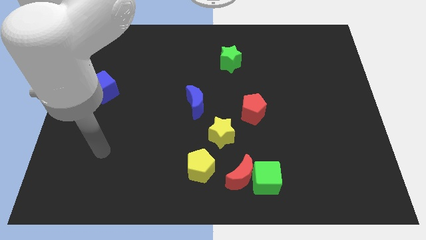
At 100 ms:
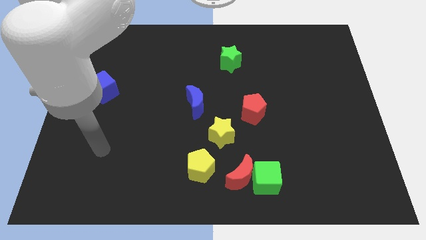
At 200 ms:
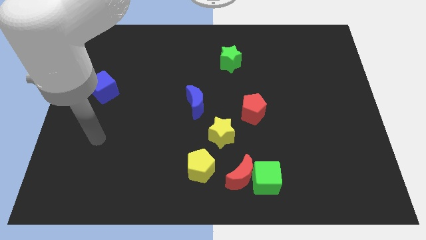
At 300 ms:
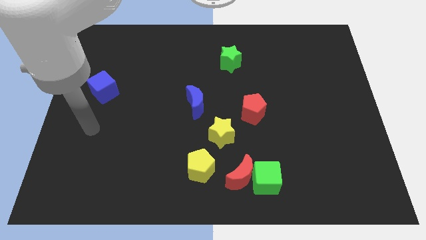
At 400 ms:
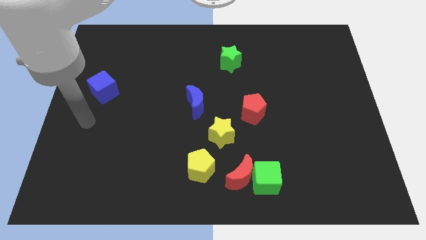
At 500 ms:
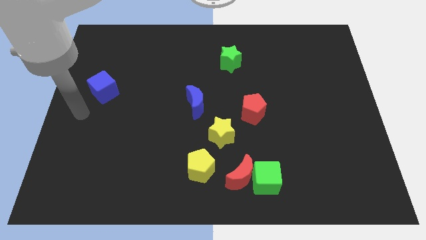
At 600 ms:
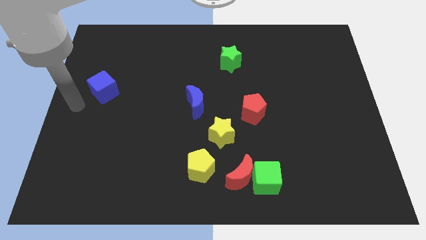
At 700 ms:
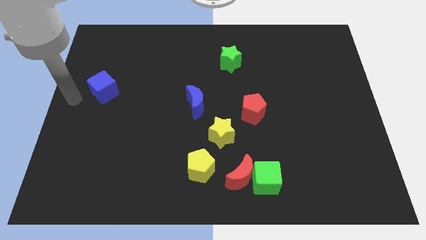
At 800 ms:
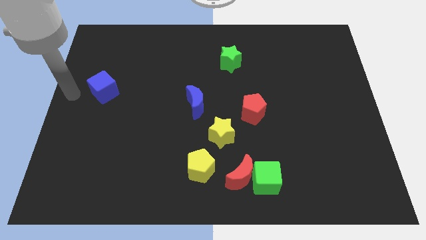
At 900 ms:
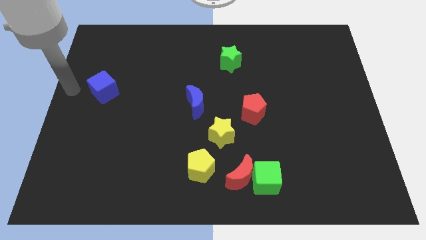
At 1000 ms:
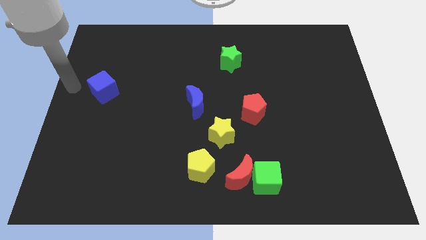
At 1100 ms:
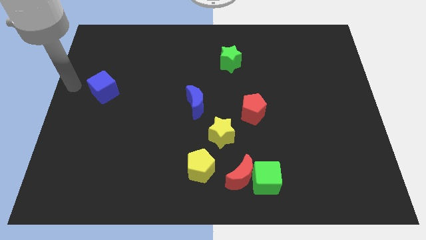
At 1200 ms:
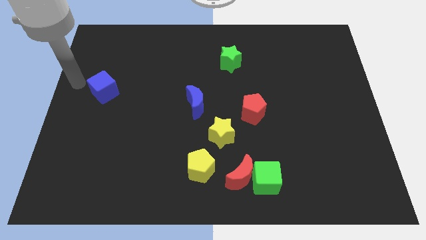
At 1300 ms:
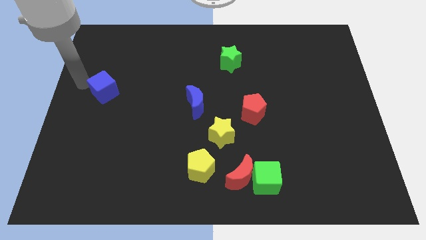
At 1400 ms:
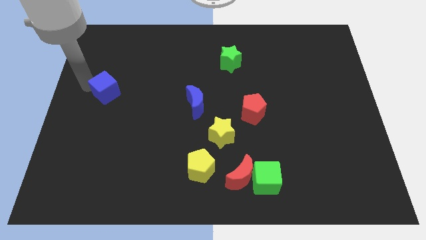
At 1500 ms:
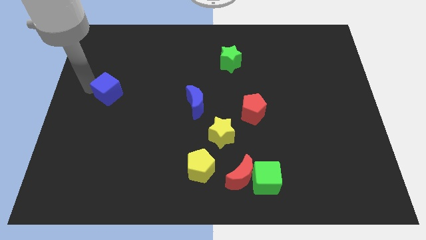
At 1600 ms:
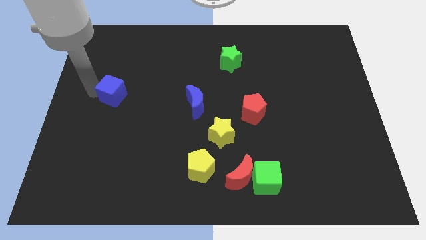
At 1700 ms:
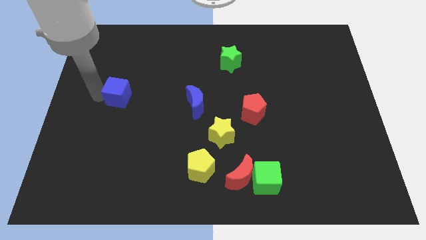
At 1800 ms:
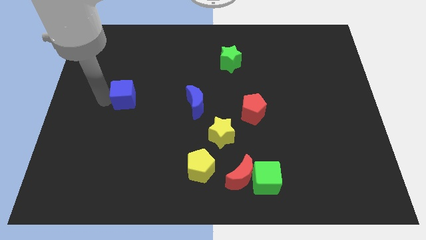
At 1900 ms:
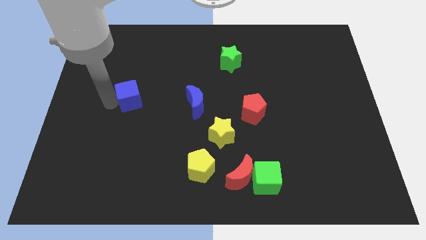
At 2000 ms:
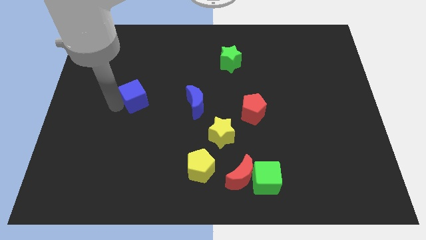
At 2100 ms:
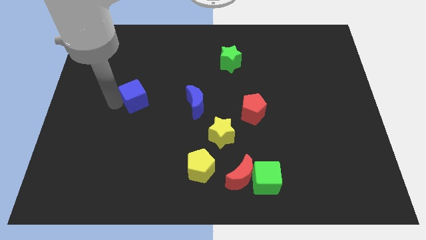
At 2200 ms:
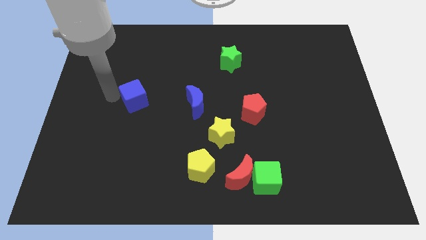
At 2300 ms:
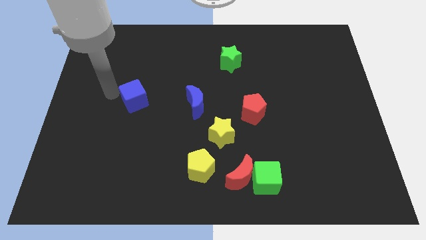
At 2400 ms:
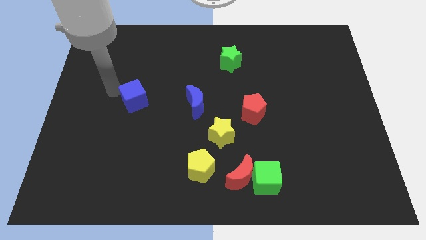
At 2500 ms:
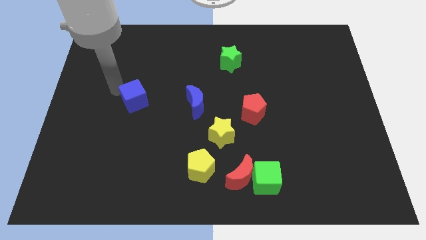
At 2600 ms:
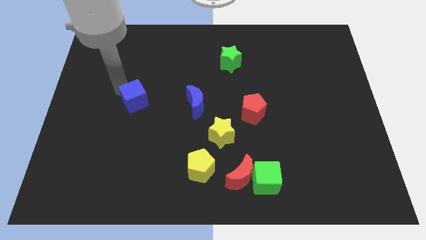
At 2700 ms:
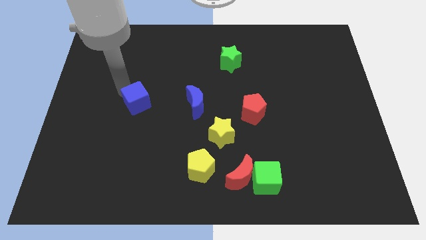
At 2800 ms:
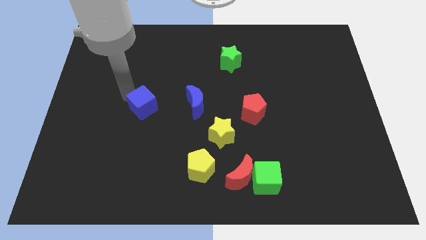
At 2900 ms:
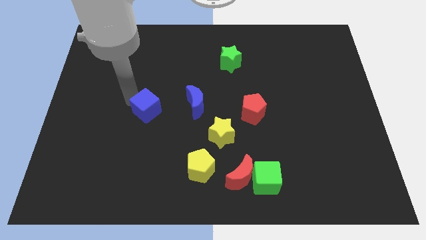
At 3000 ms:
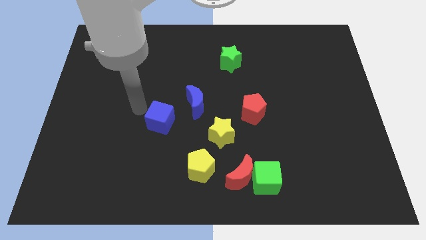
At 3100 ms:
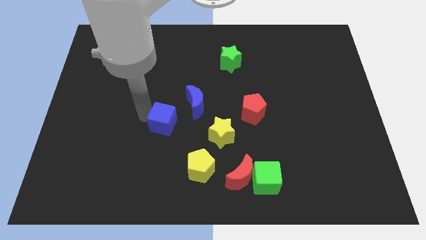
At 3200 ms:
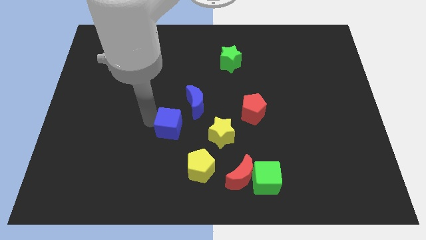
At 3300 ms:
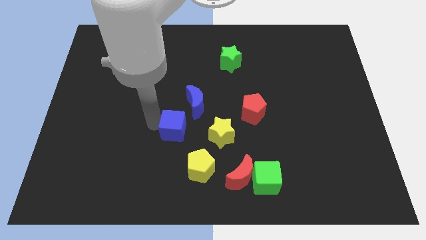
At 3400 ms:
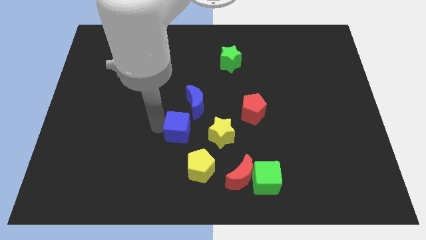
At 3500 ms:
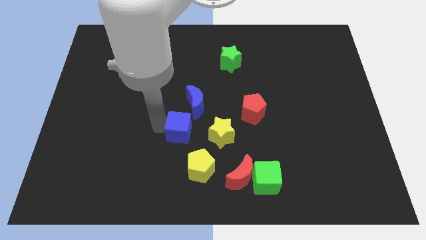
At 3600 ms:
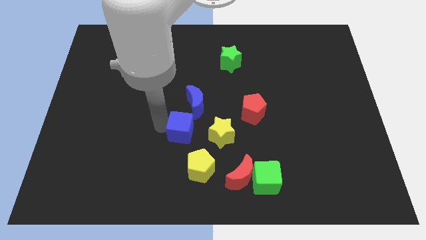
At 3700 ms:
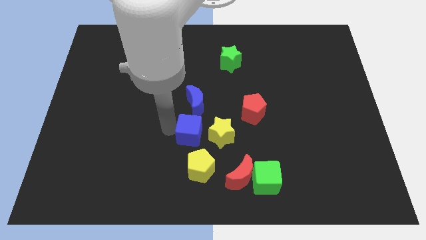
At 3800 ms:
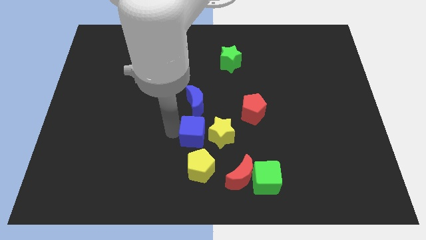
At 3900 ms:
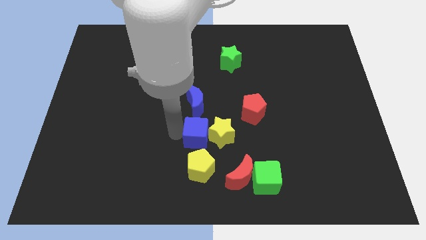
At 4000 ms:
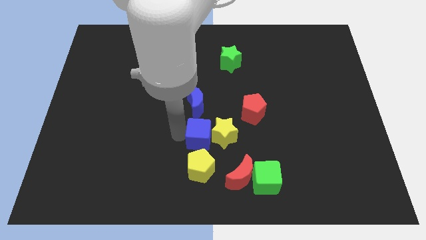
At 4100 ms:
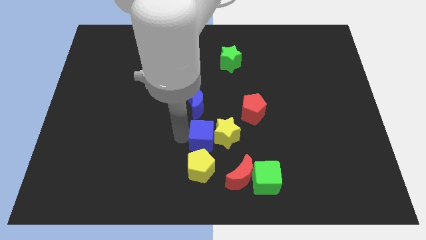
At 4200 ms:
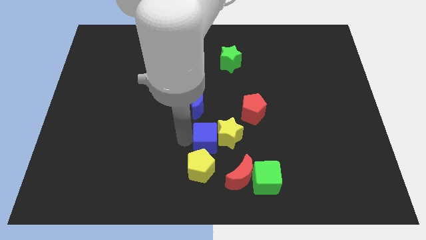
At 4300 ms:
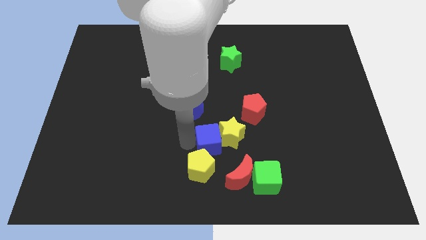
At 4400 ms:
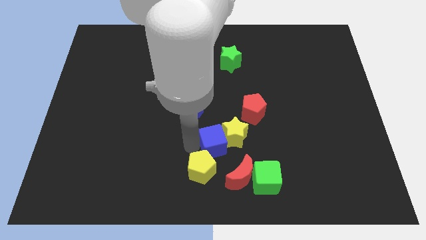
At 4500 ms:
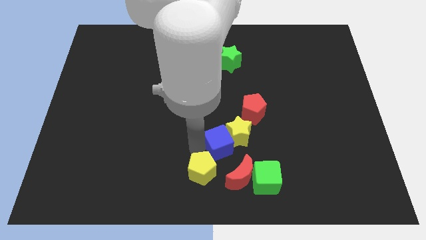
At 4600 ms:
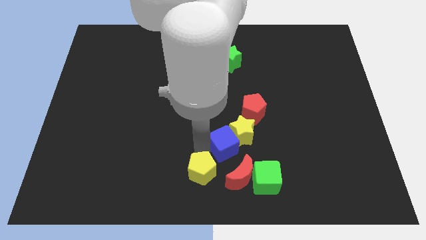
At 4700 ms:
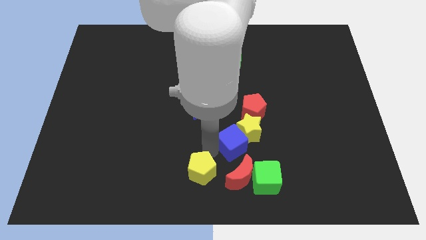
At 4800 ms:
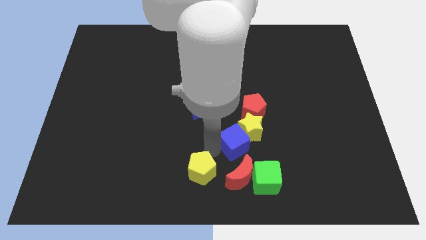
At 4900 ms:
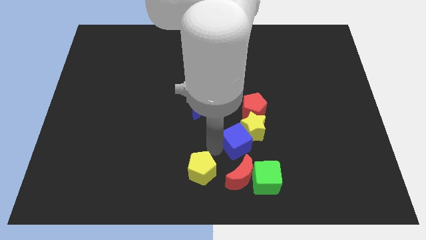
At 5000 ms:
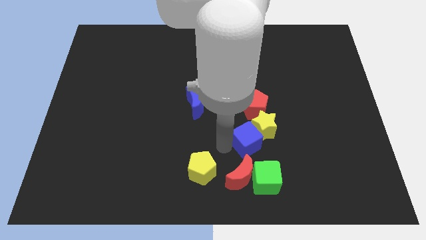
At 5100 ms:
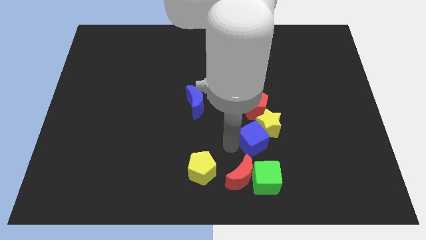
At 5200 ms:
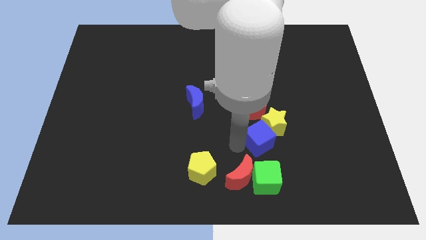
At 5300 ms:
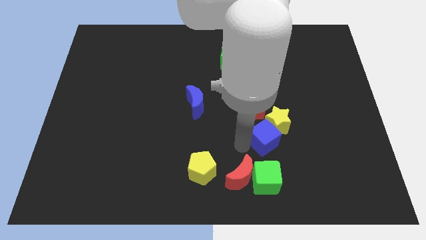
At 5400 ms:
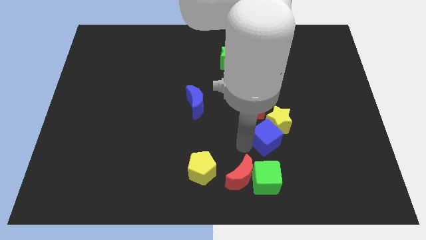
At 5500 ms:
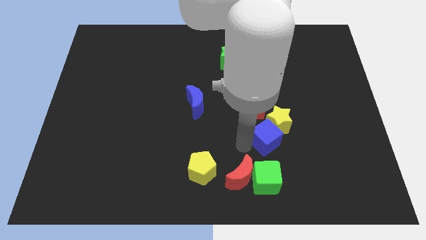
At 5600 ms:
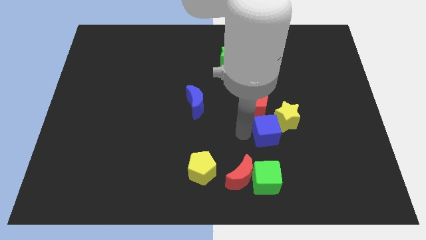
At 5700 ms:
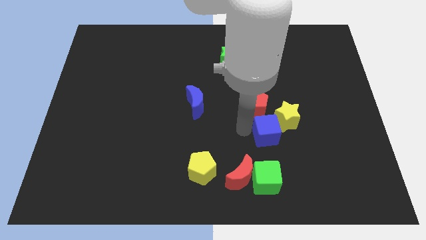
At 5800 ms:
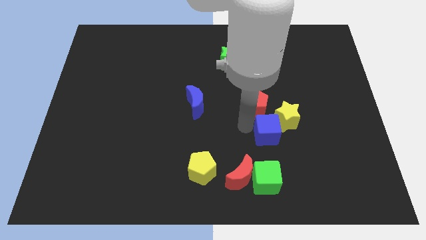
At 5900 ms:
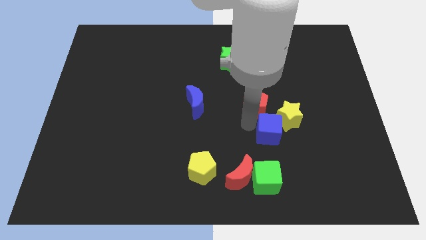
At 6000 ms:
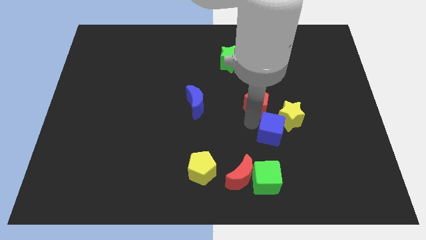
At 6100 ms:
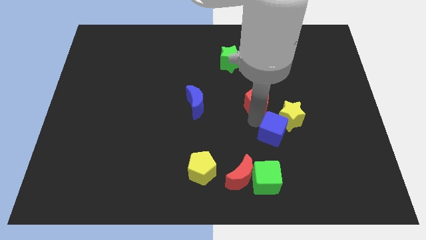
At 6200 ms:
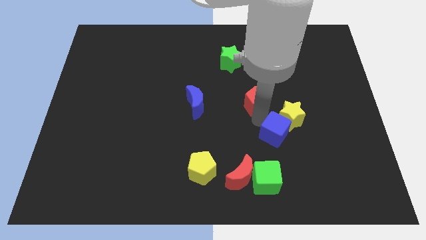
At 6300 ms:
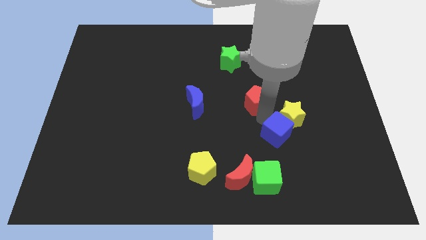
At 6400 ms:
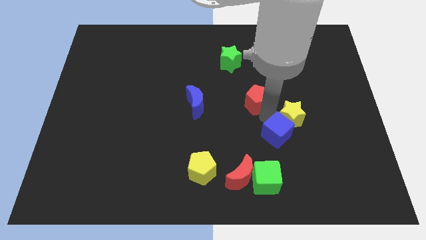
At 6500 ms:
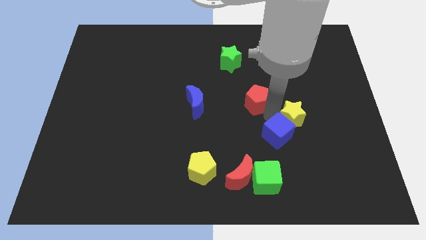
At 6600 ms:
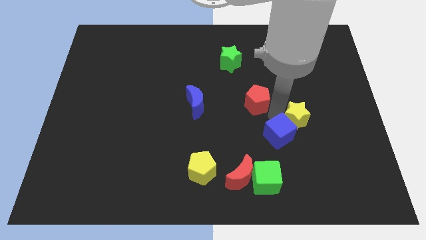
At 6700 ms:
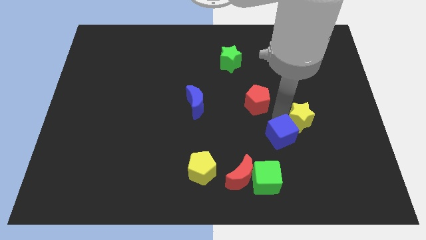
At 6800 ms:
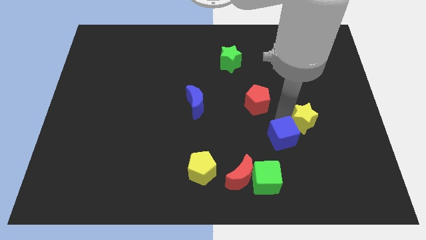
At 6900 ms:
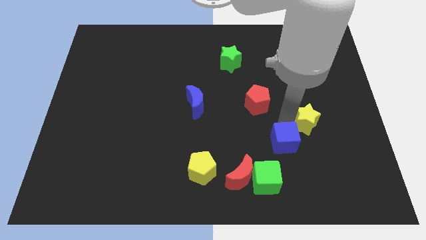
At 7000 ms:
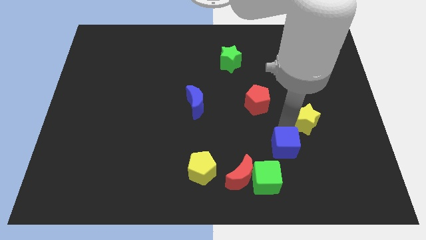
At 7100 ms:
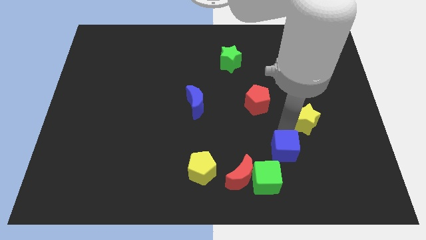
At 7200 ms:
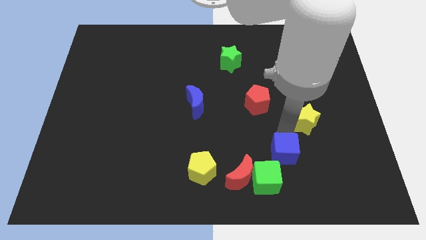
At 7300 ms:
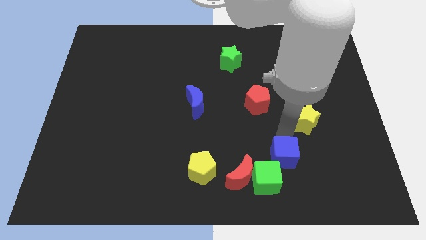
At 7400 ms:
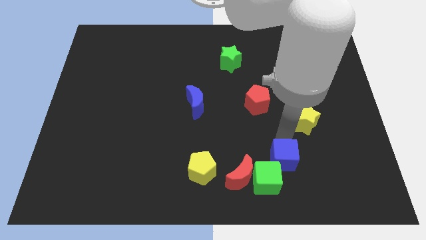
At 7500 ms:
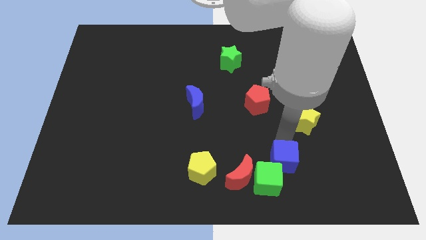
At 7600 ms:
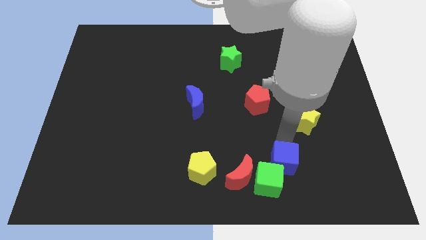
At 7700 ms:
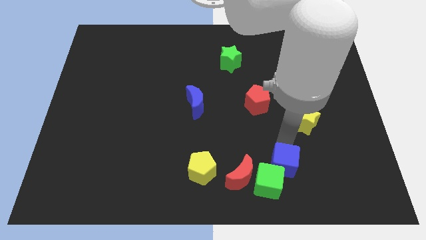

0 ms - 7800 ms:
move the blue cube towards the green cube

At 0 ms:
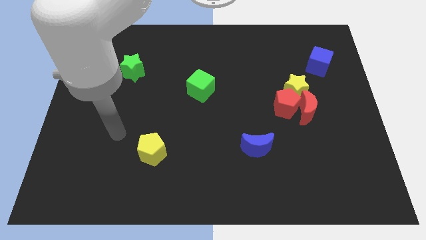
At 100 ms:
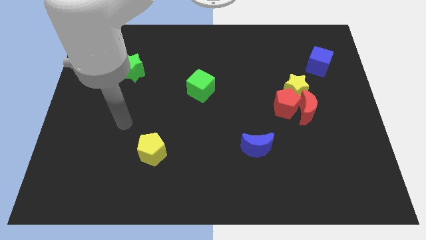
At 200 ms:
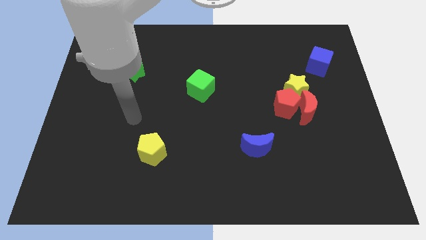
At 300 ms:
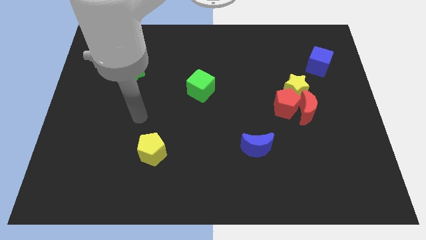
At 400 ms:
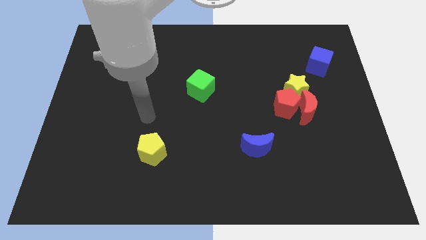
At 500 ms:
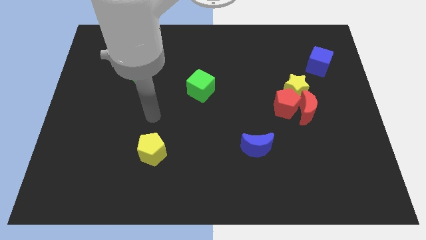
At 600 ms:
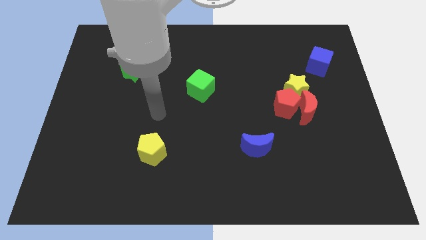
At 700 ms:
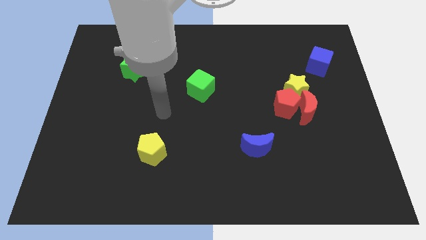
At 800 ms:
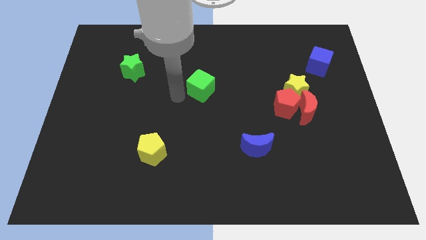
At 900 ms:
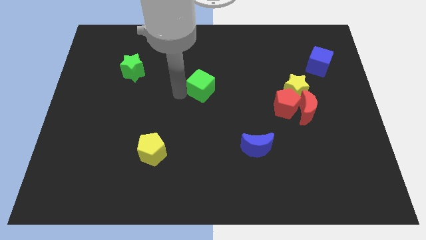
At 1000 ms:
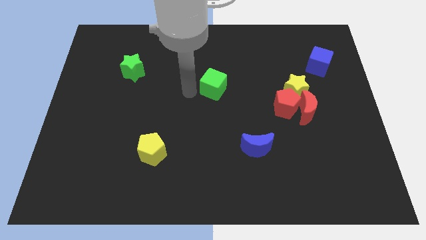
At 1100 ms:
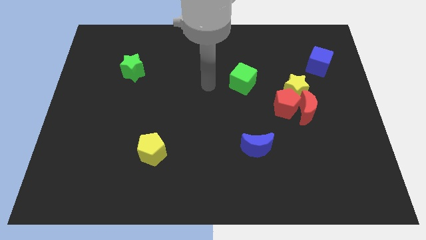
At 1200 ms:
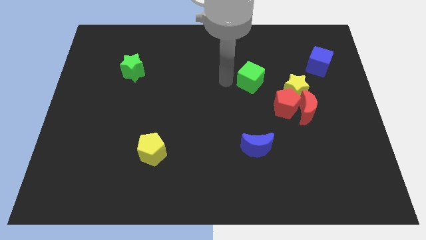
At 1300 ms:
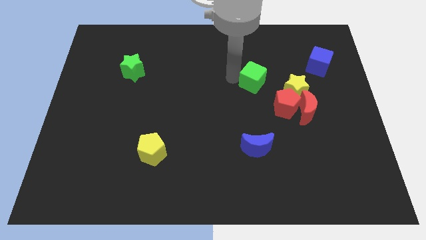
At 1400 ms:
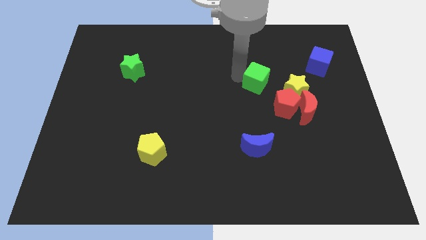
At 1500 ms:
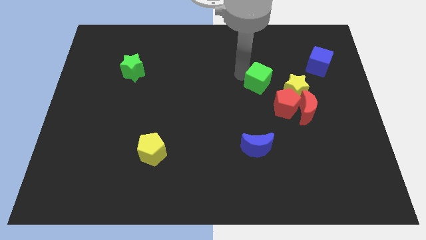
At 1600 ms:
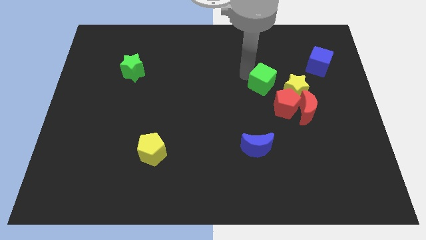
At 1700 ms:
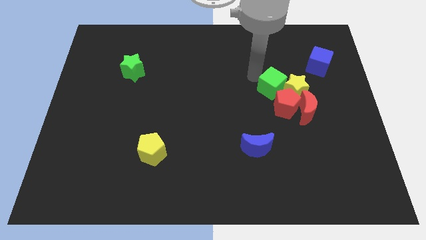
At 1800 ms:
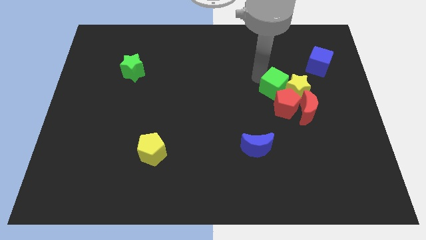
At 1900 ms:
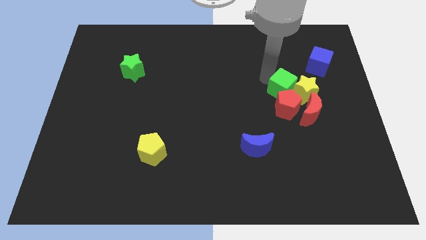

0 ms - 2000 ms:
move the green cube next to the yellow star
